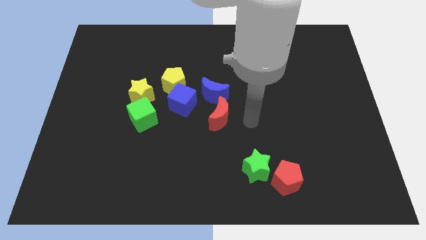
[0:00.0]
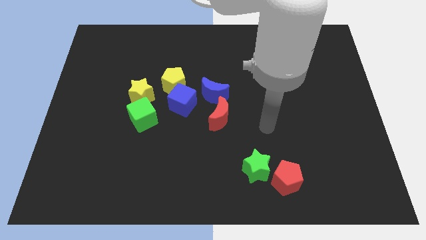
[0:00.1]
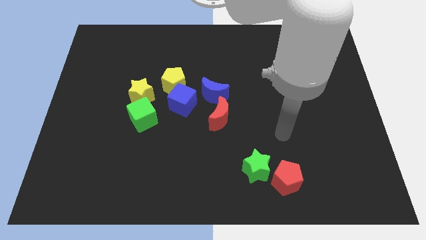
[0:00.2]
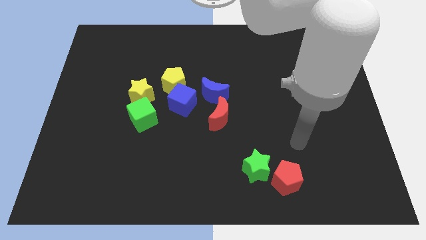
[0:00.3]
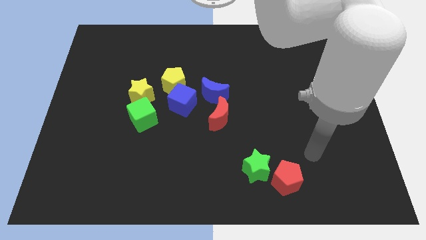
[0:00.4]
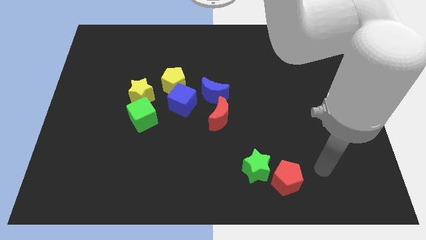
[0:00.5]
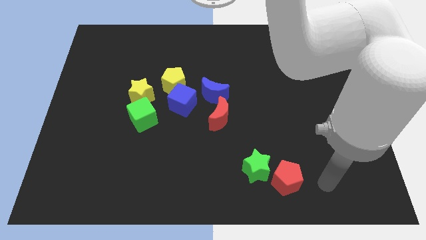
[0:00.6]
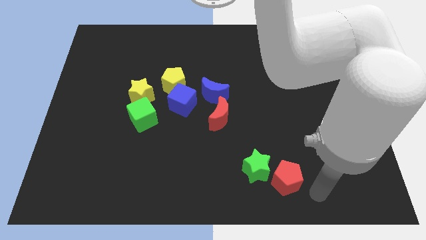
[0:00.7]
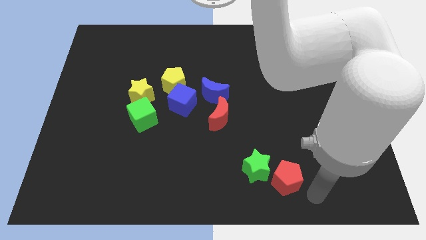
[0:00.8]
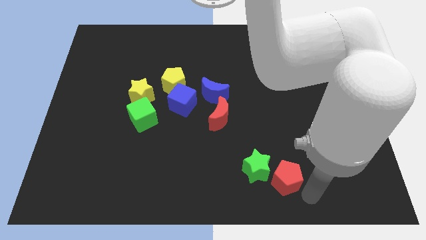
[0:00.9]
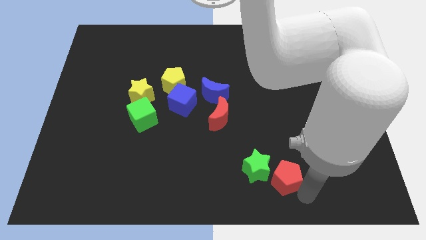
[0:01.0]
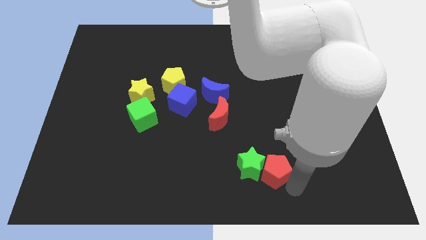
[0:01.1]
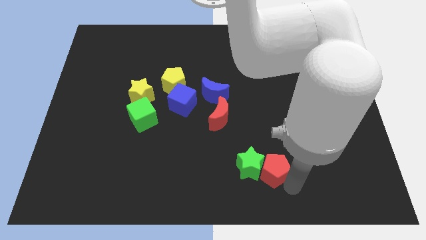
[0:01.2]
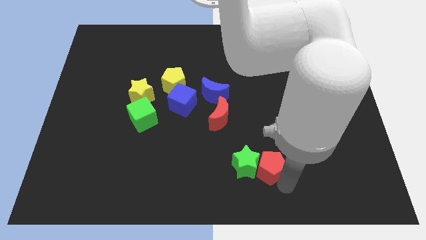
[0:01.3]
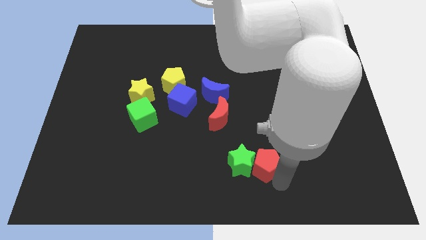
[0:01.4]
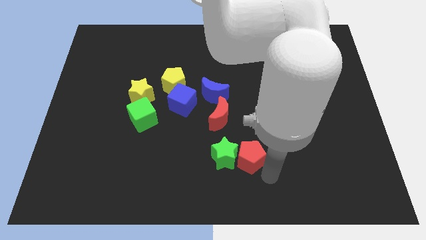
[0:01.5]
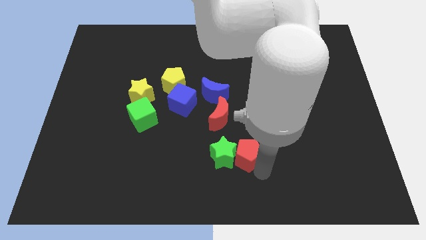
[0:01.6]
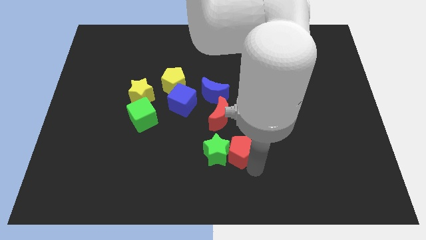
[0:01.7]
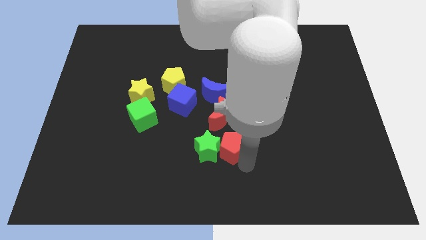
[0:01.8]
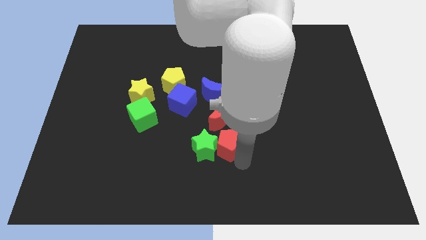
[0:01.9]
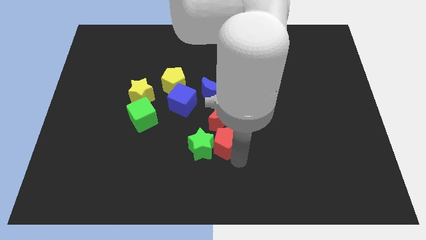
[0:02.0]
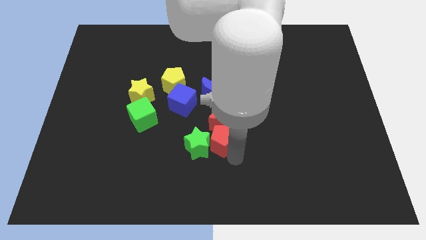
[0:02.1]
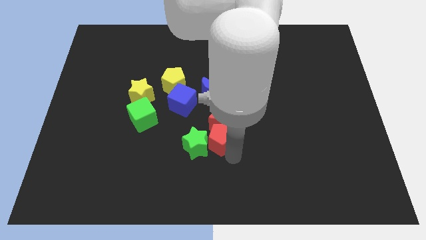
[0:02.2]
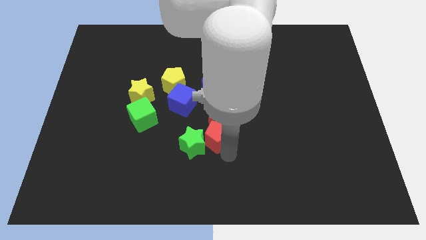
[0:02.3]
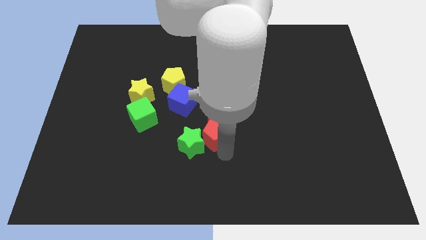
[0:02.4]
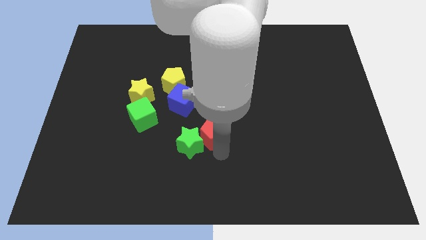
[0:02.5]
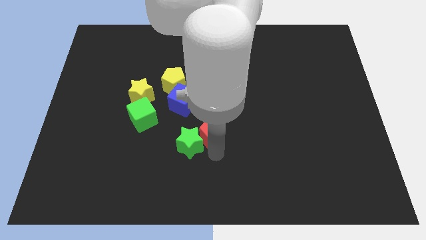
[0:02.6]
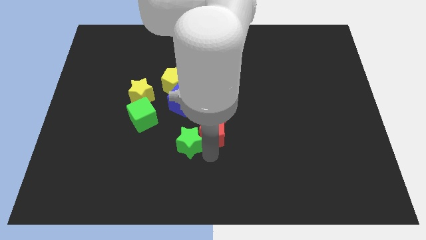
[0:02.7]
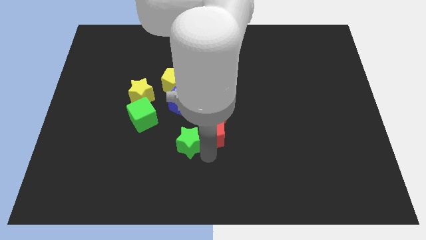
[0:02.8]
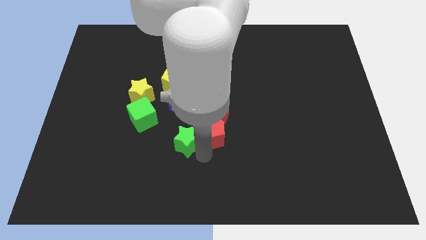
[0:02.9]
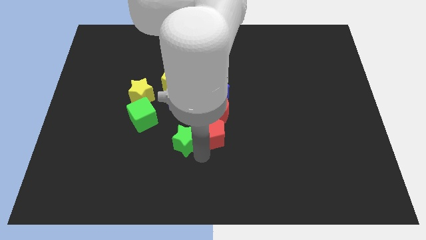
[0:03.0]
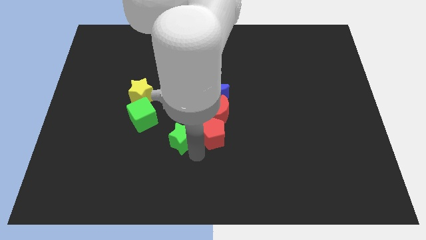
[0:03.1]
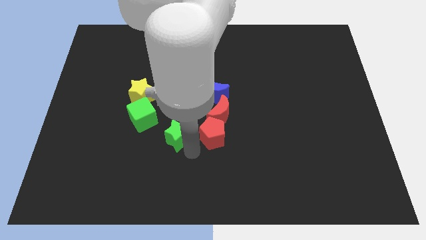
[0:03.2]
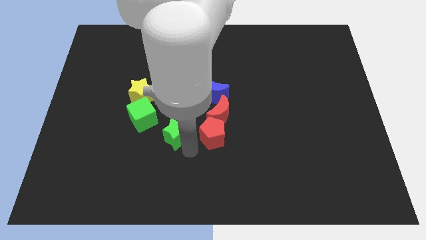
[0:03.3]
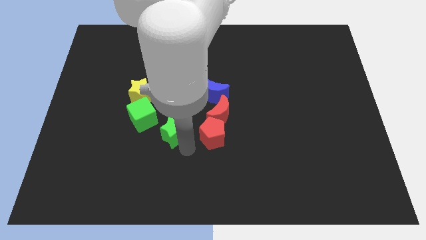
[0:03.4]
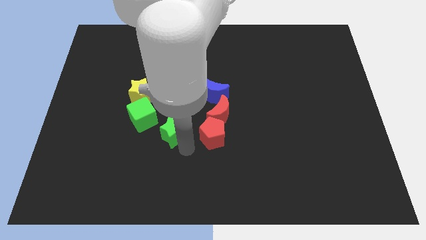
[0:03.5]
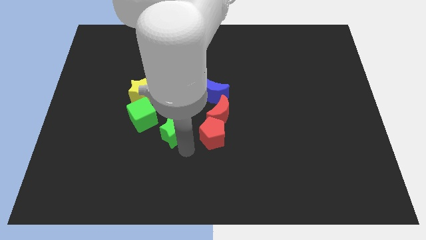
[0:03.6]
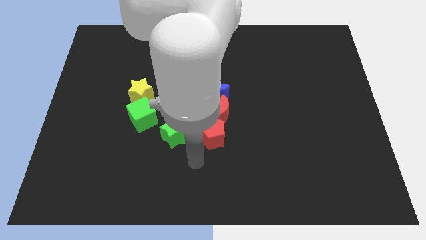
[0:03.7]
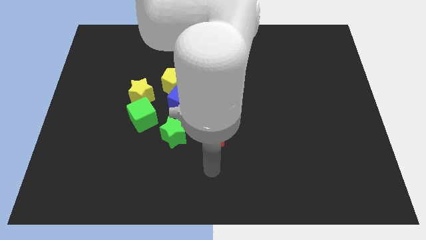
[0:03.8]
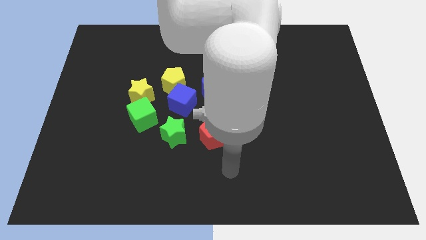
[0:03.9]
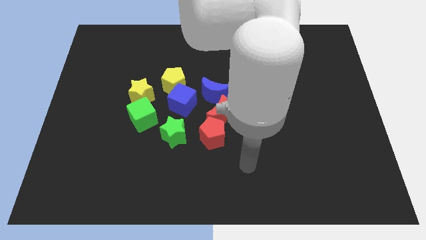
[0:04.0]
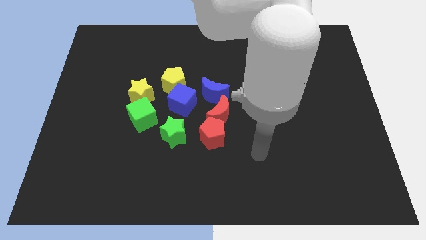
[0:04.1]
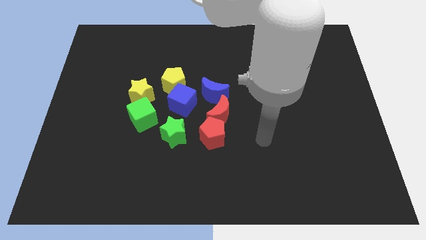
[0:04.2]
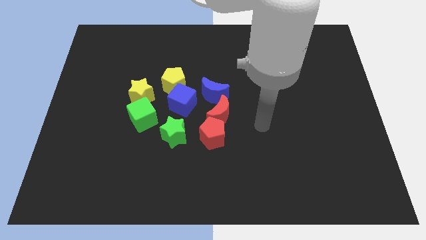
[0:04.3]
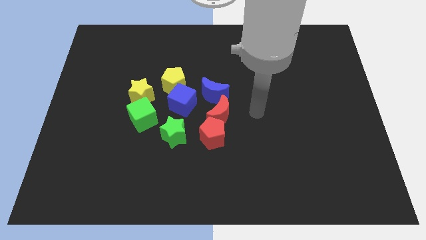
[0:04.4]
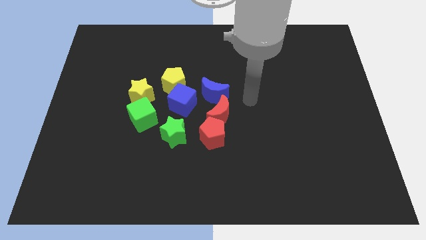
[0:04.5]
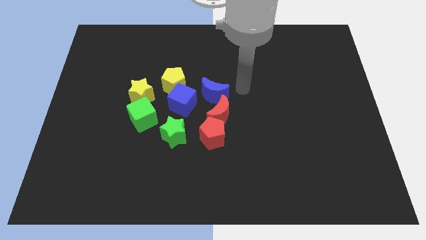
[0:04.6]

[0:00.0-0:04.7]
move the green star and the red pentagon to the group of blocks

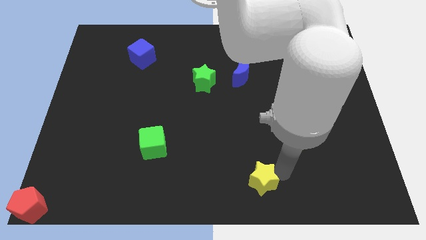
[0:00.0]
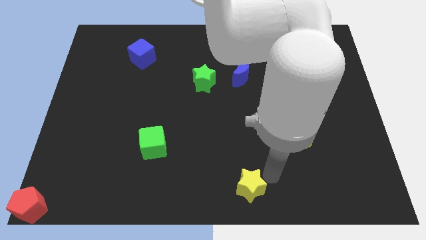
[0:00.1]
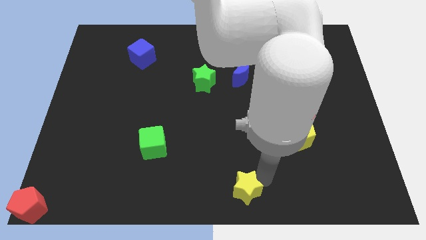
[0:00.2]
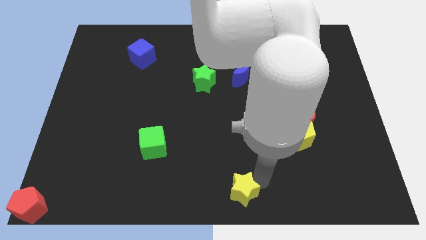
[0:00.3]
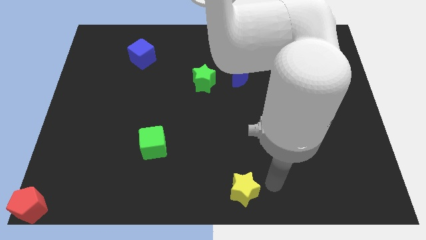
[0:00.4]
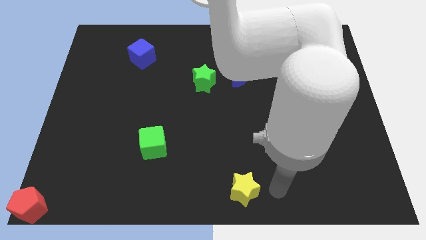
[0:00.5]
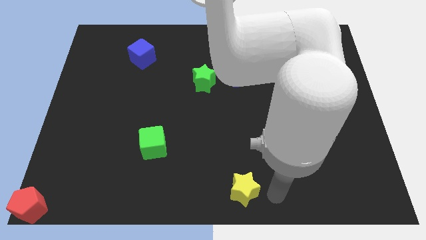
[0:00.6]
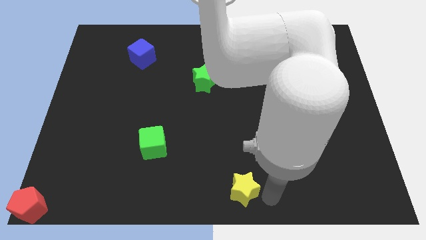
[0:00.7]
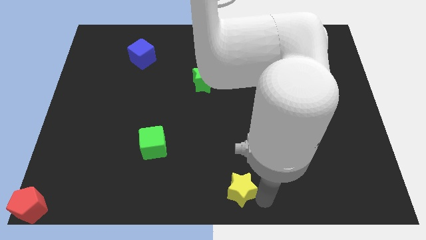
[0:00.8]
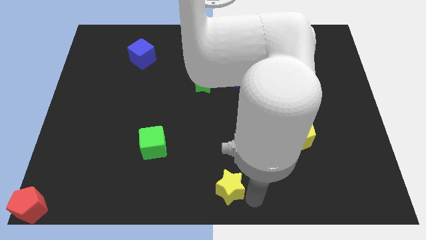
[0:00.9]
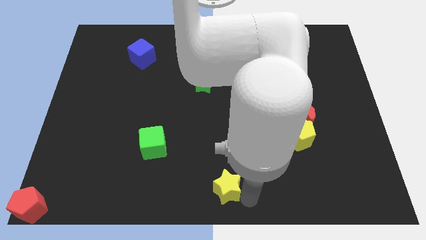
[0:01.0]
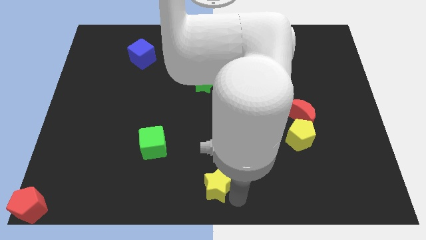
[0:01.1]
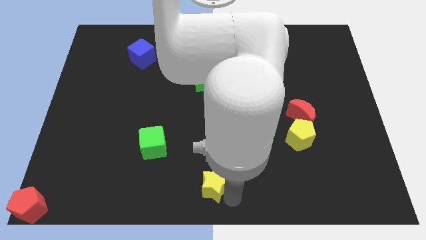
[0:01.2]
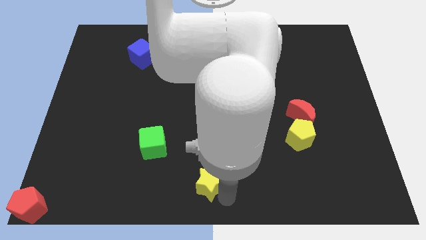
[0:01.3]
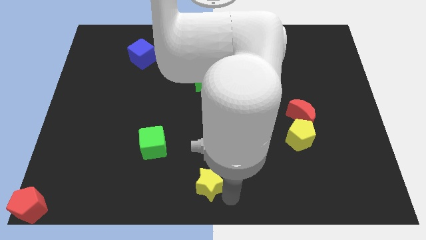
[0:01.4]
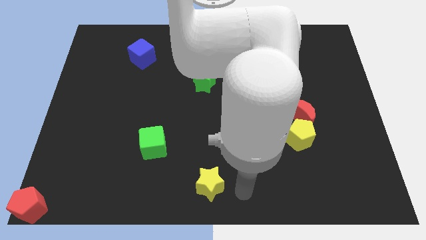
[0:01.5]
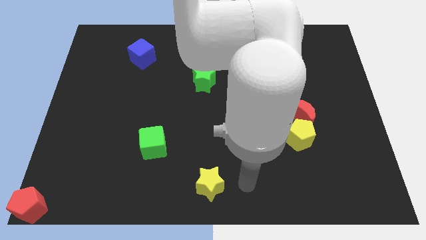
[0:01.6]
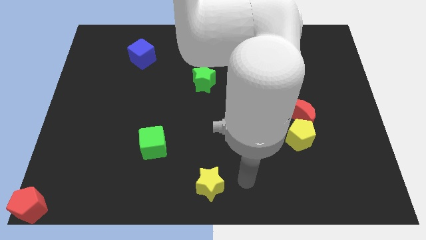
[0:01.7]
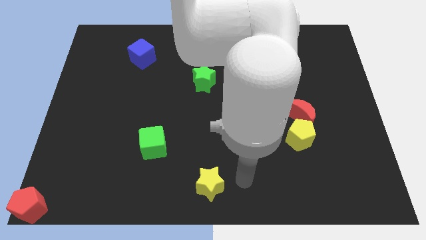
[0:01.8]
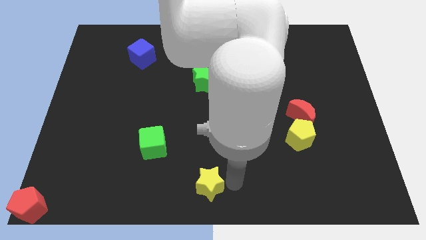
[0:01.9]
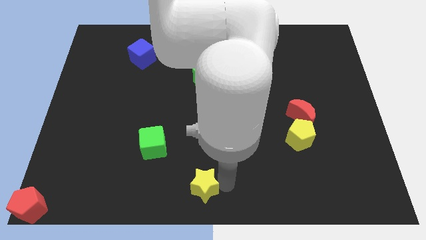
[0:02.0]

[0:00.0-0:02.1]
place the yellow star at bottom center of the board

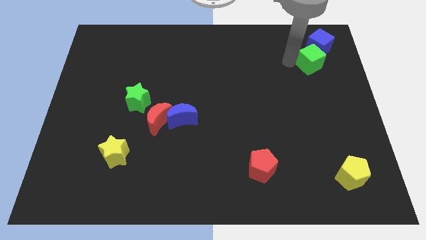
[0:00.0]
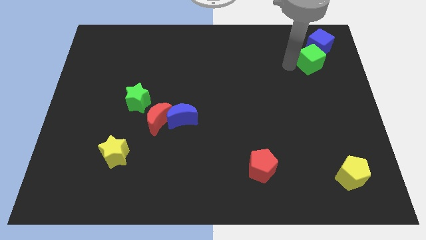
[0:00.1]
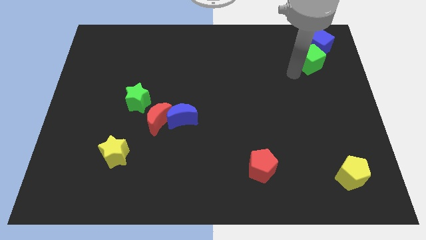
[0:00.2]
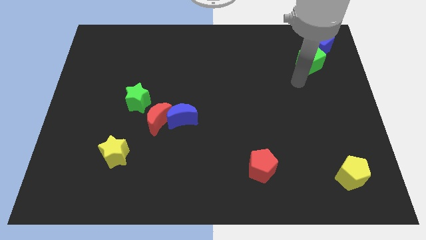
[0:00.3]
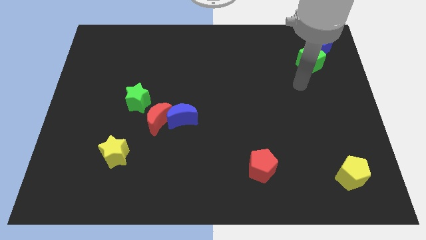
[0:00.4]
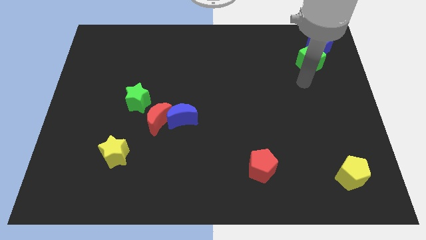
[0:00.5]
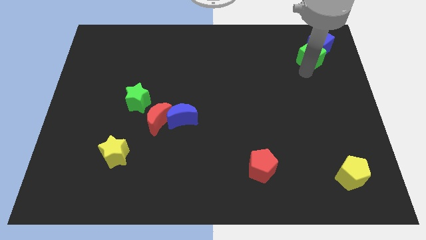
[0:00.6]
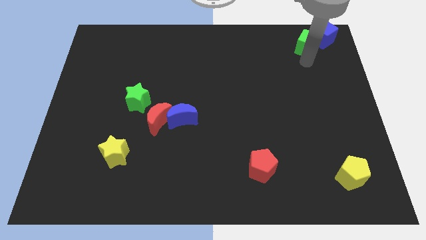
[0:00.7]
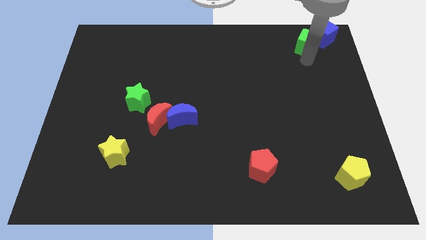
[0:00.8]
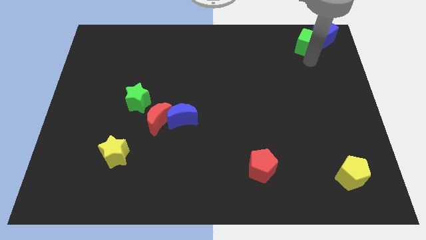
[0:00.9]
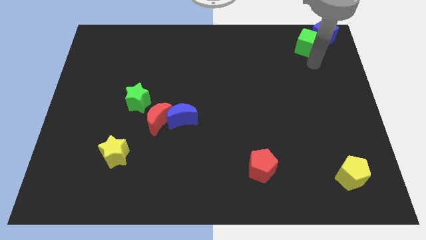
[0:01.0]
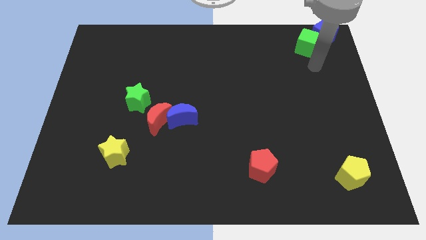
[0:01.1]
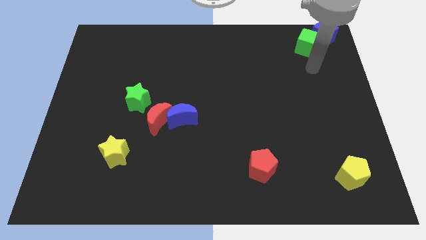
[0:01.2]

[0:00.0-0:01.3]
push the green cube and blue cube towards the top right corner of the board

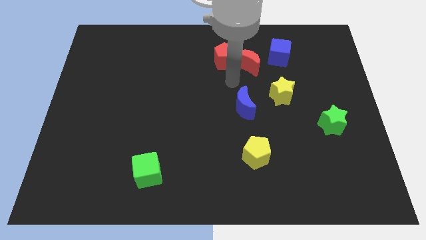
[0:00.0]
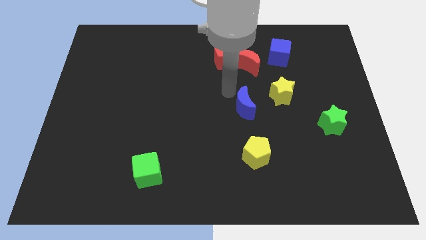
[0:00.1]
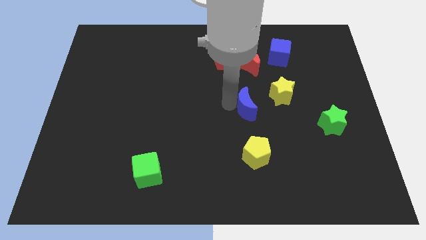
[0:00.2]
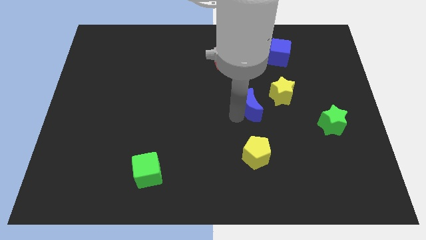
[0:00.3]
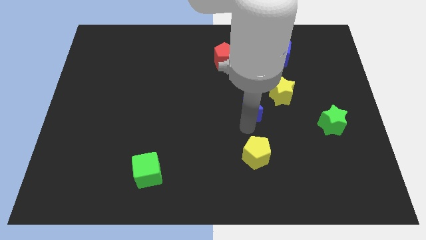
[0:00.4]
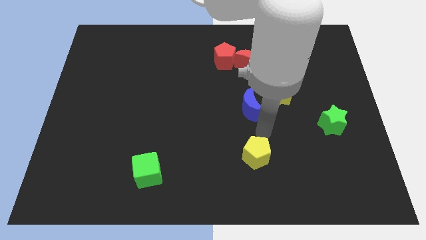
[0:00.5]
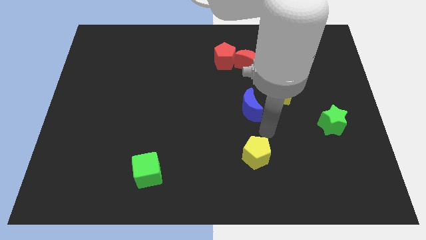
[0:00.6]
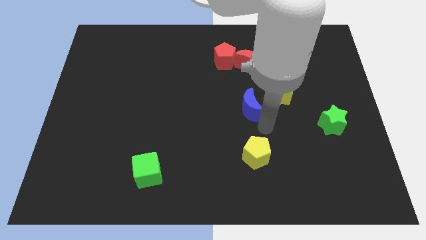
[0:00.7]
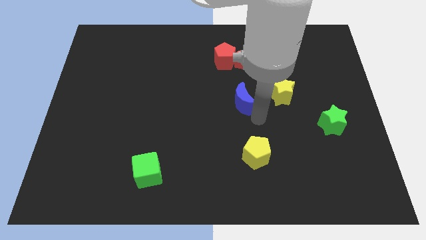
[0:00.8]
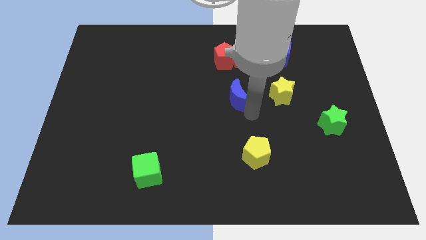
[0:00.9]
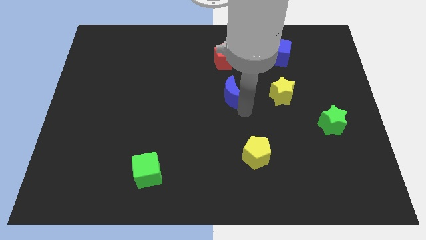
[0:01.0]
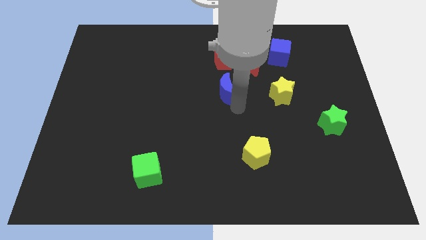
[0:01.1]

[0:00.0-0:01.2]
place the blue crescent to the bottom of the red pentagon
